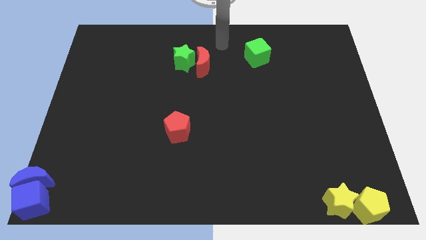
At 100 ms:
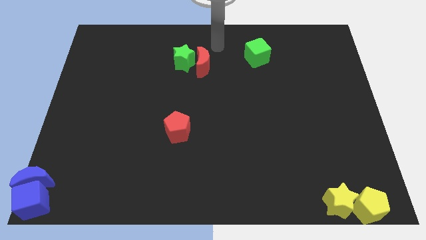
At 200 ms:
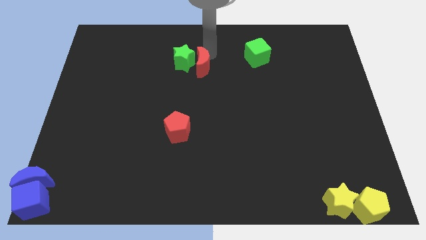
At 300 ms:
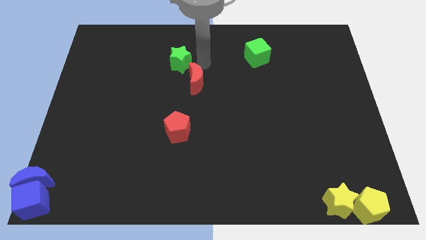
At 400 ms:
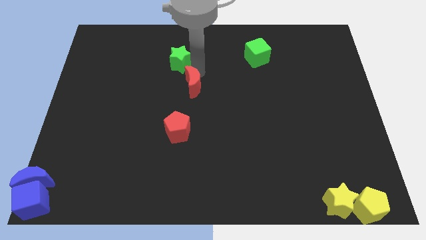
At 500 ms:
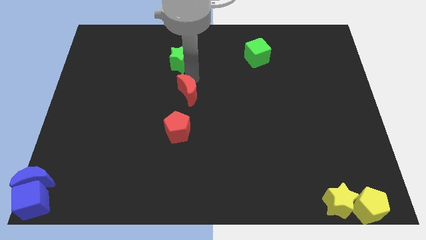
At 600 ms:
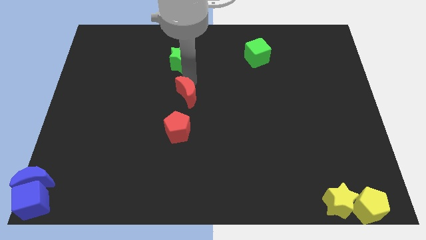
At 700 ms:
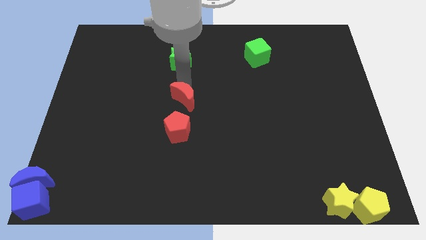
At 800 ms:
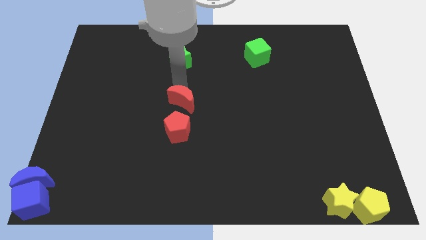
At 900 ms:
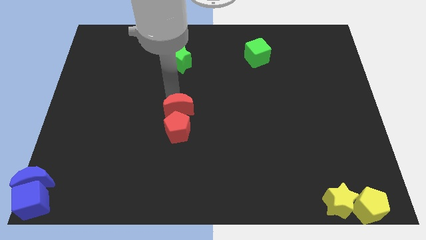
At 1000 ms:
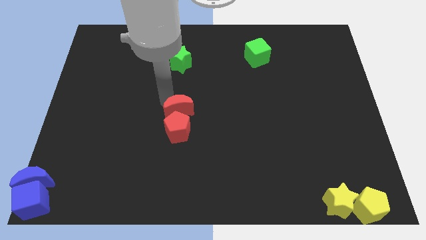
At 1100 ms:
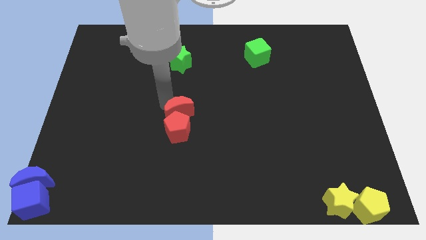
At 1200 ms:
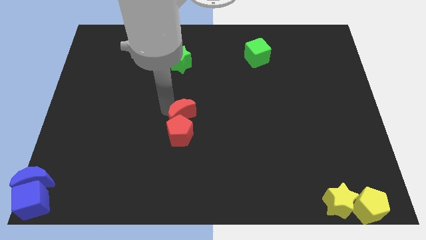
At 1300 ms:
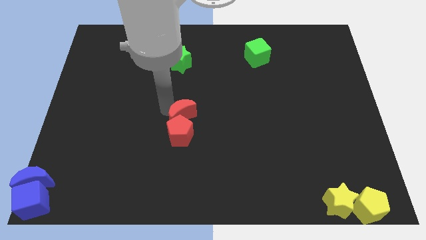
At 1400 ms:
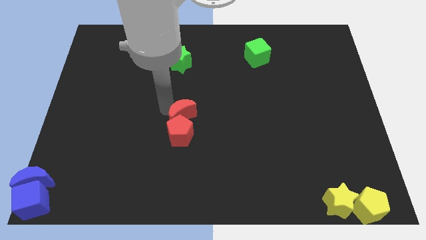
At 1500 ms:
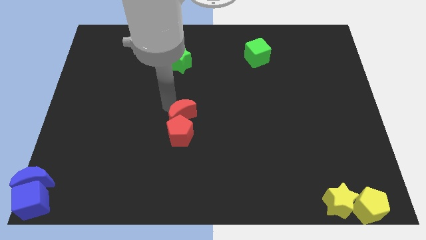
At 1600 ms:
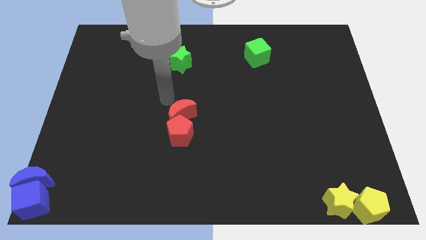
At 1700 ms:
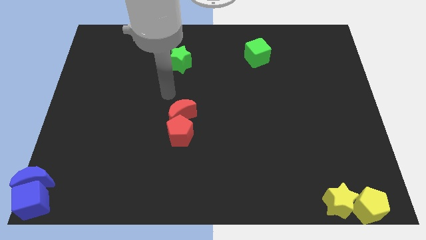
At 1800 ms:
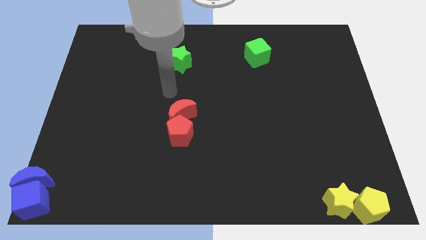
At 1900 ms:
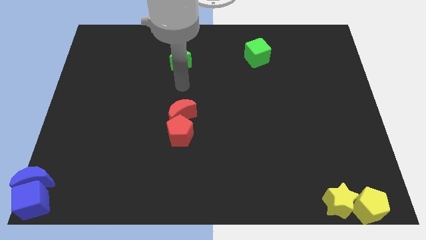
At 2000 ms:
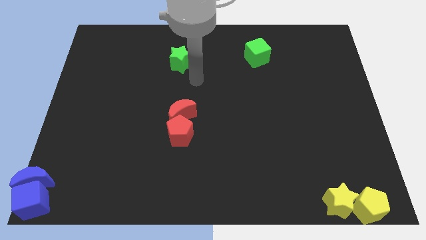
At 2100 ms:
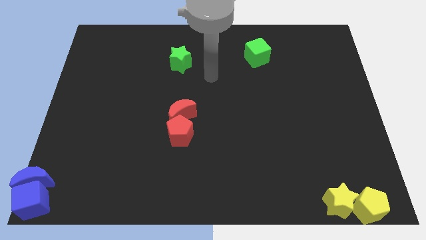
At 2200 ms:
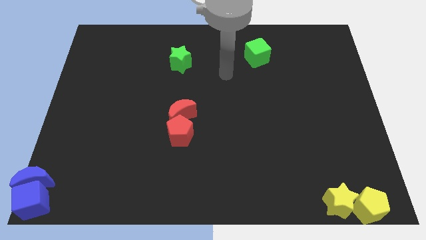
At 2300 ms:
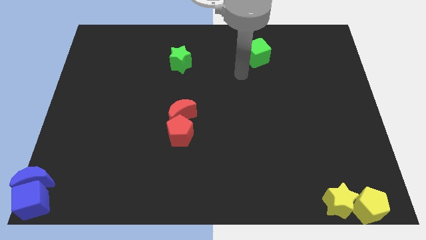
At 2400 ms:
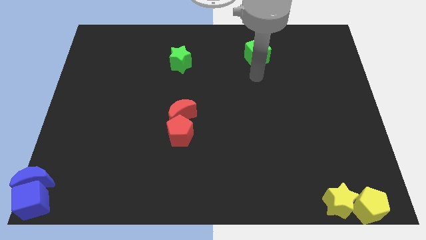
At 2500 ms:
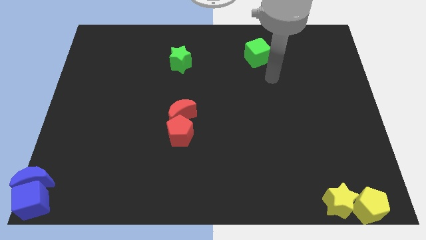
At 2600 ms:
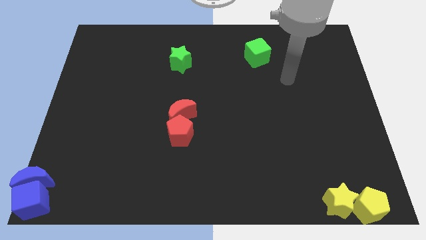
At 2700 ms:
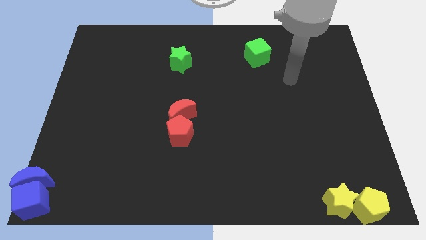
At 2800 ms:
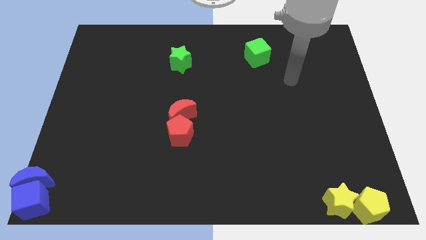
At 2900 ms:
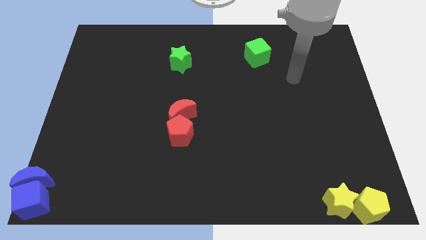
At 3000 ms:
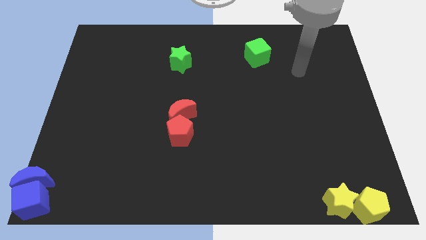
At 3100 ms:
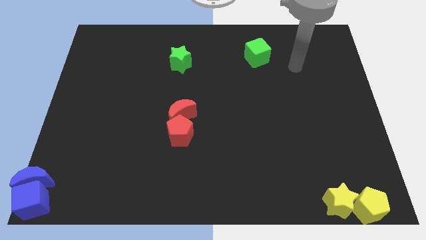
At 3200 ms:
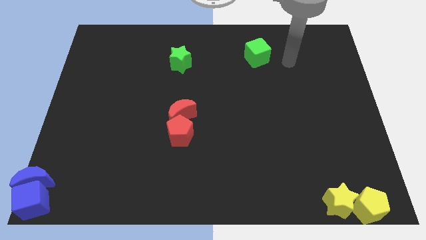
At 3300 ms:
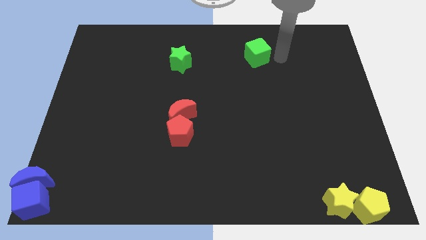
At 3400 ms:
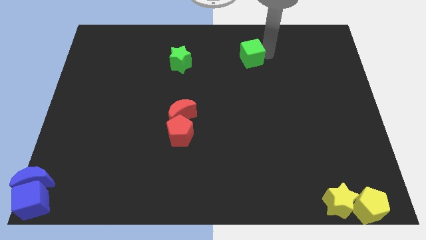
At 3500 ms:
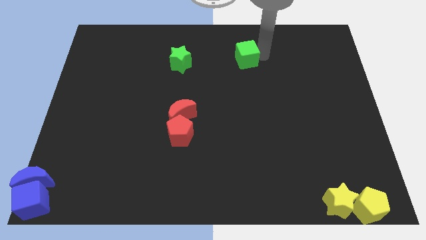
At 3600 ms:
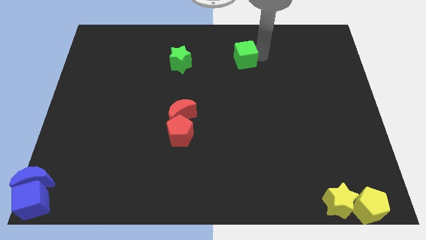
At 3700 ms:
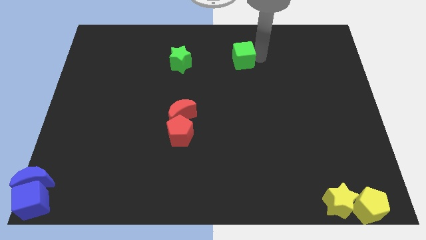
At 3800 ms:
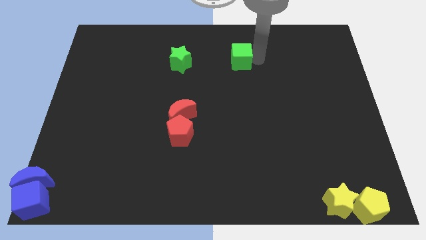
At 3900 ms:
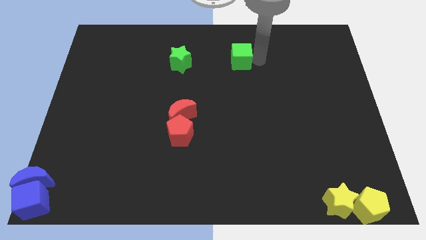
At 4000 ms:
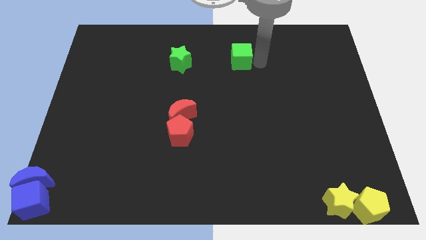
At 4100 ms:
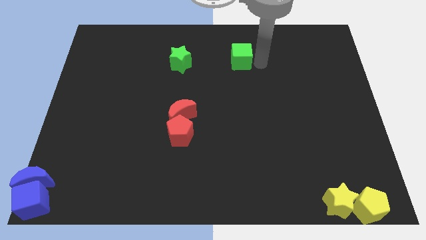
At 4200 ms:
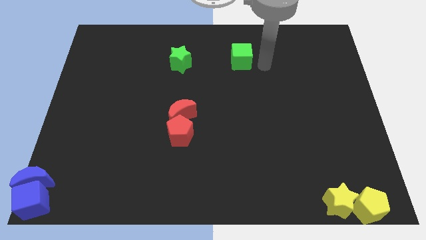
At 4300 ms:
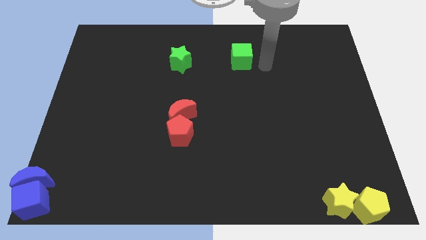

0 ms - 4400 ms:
move red crescent into the red pentagon

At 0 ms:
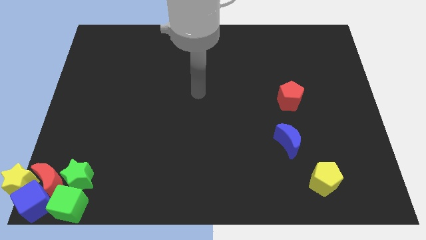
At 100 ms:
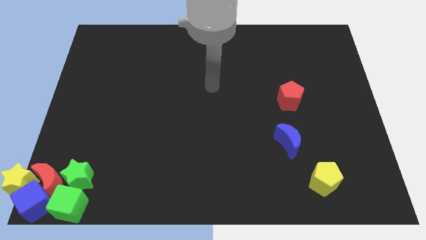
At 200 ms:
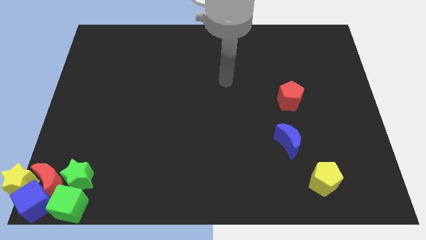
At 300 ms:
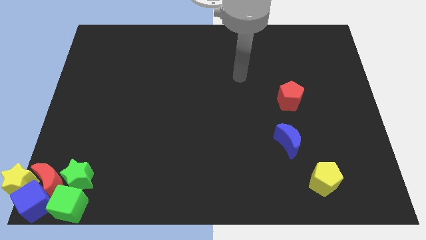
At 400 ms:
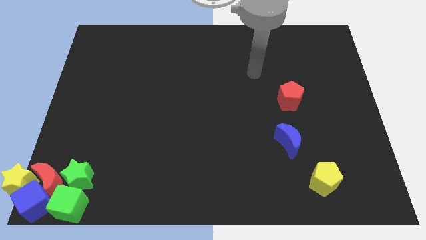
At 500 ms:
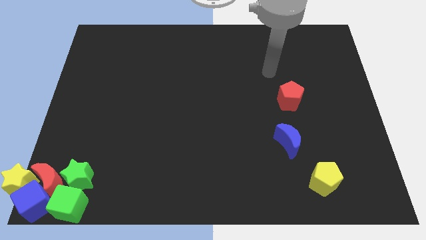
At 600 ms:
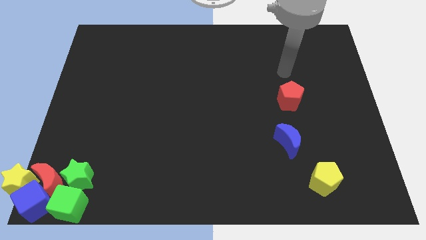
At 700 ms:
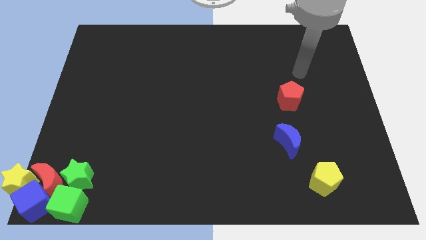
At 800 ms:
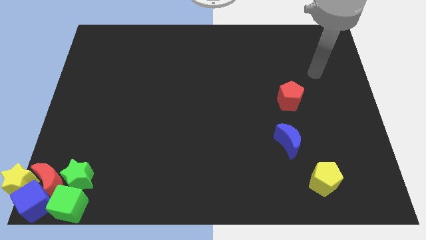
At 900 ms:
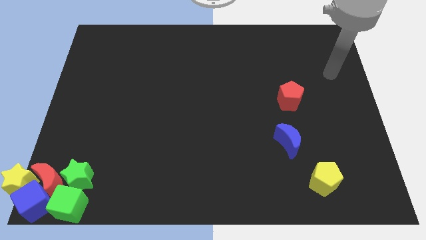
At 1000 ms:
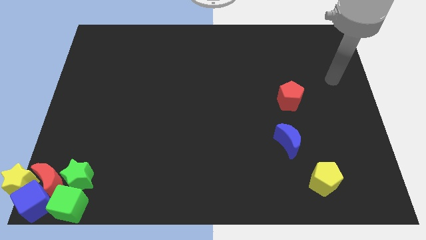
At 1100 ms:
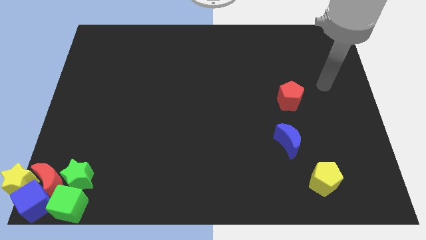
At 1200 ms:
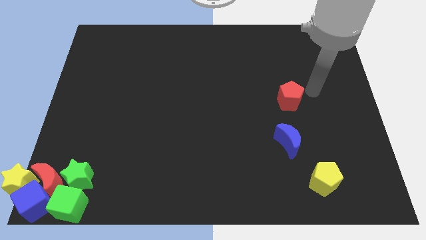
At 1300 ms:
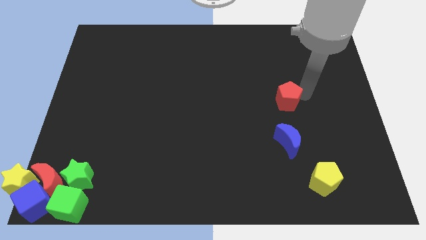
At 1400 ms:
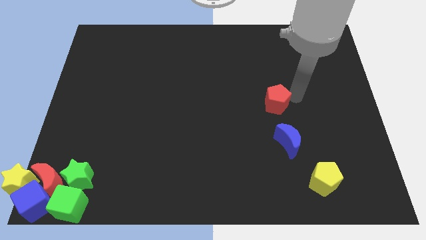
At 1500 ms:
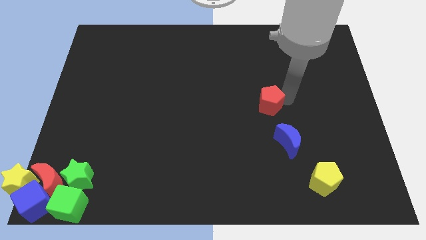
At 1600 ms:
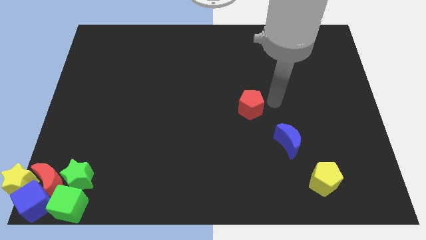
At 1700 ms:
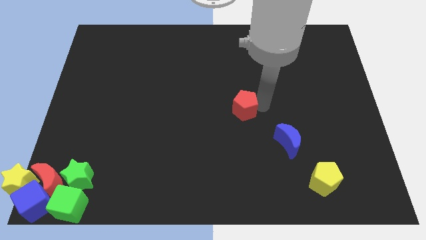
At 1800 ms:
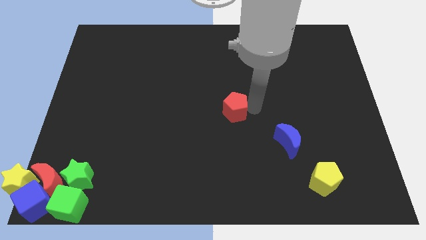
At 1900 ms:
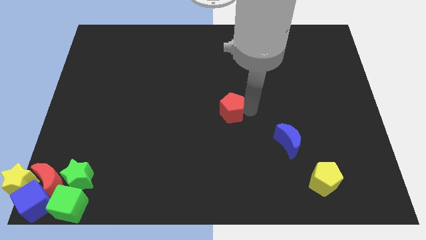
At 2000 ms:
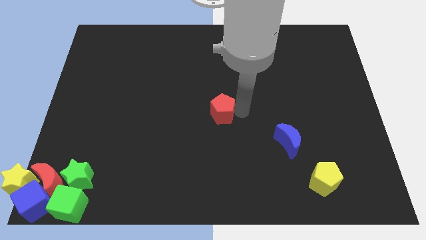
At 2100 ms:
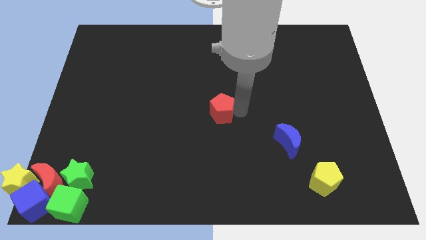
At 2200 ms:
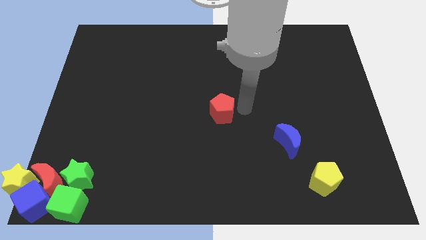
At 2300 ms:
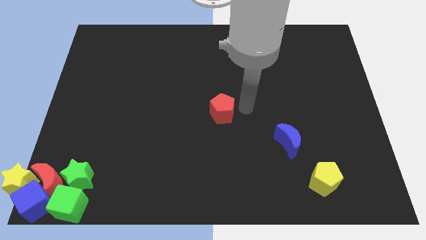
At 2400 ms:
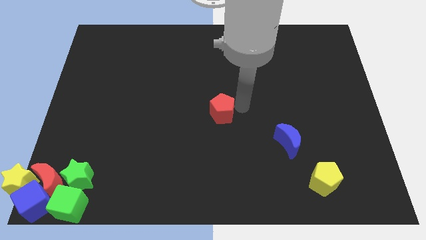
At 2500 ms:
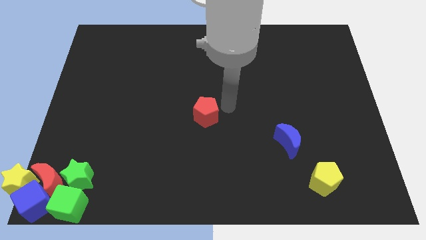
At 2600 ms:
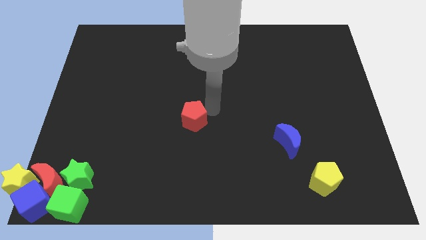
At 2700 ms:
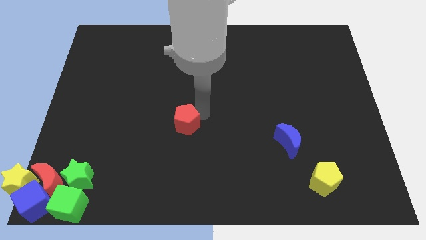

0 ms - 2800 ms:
place the red pentagon to the center of the board

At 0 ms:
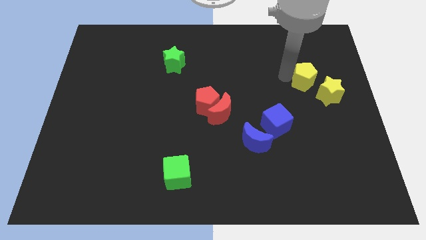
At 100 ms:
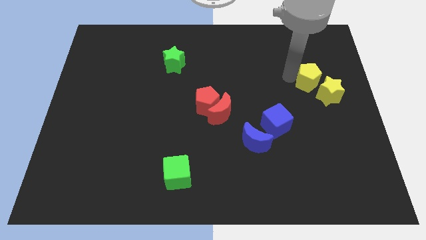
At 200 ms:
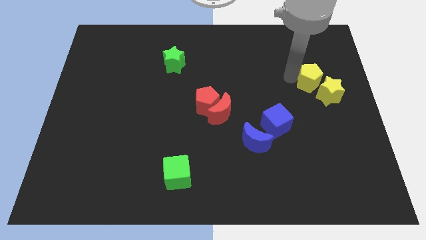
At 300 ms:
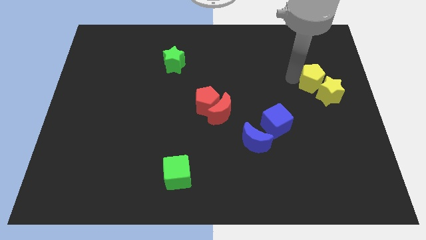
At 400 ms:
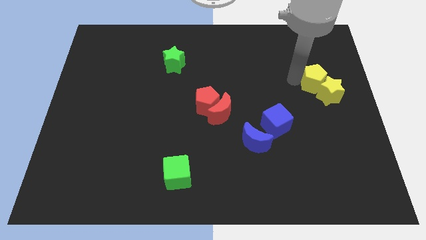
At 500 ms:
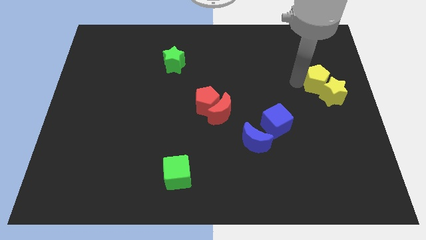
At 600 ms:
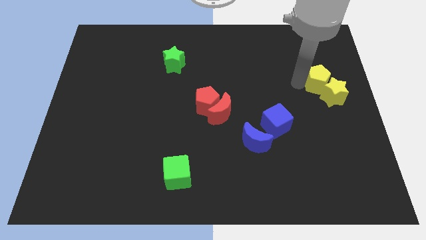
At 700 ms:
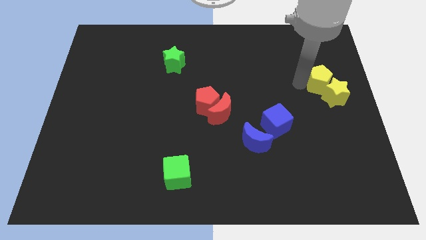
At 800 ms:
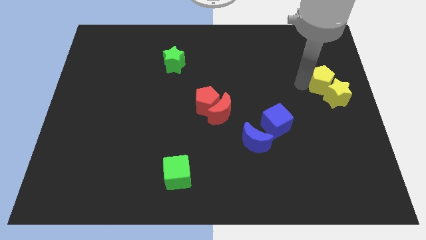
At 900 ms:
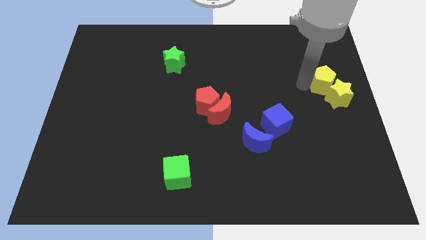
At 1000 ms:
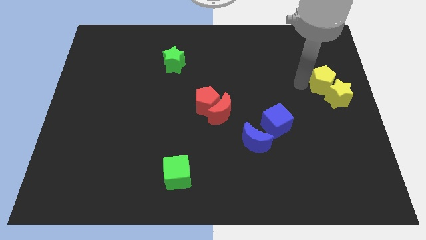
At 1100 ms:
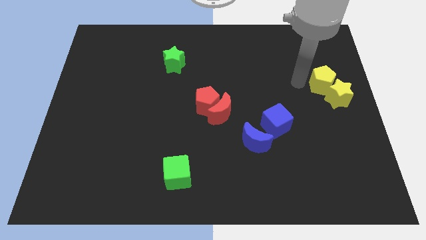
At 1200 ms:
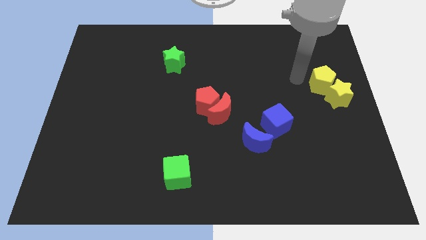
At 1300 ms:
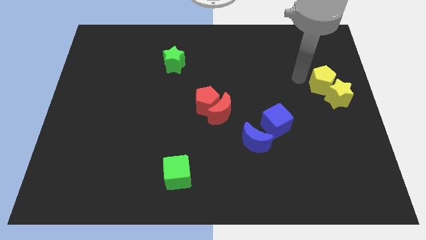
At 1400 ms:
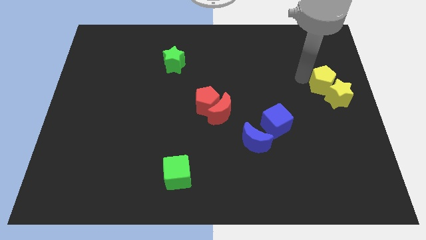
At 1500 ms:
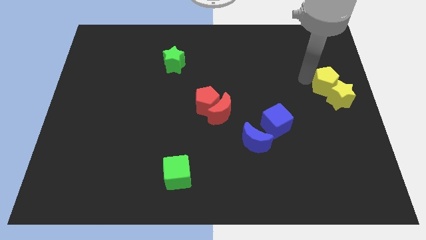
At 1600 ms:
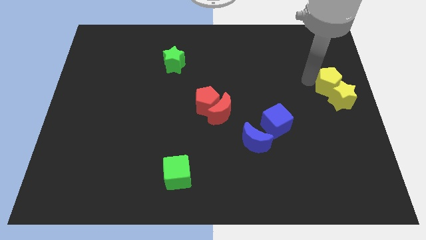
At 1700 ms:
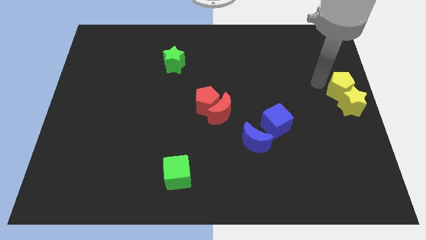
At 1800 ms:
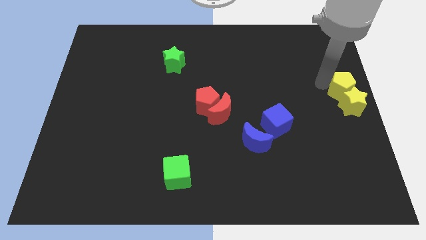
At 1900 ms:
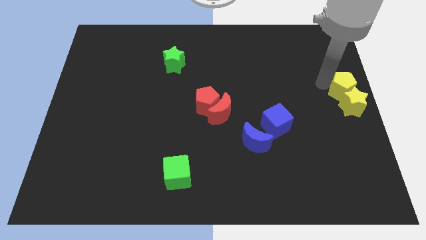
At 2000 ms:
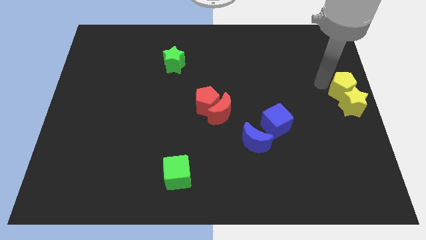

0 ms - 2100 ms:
push the yellow star into the yellow pentagon towards the right center of the board
